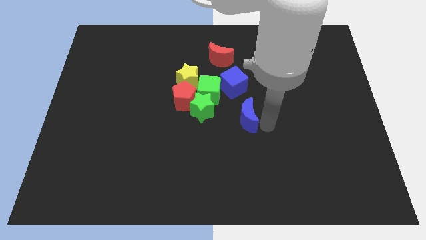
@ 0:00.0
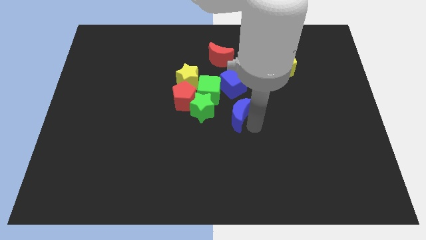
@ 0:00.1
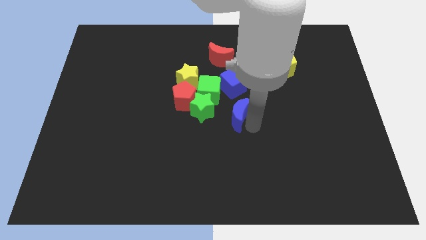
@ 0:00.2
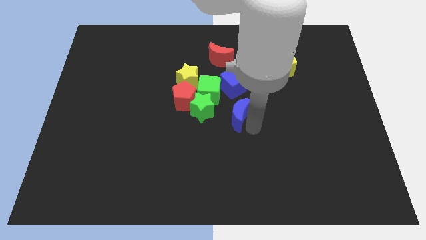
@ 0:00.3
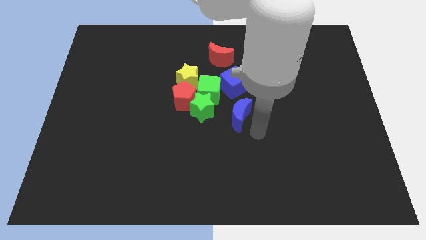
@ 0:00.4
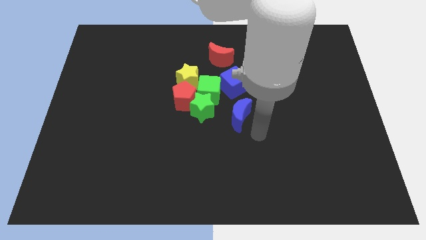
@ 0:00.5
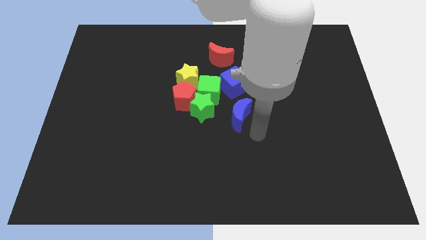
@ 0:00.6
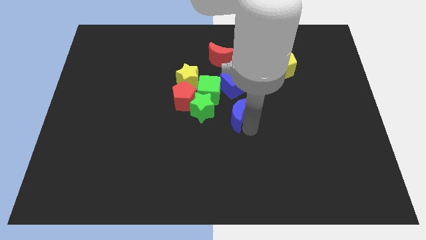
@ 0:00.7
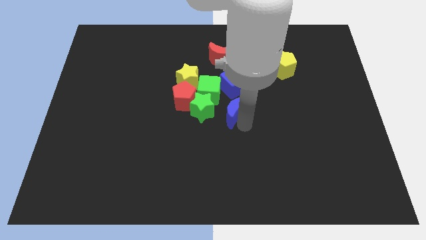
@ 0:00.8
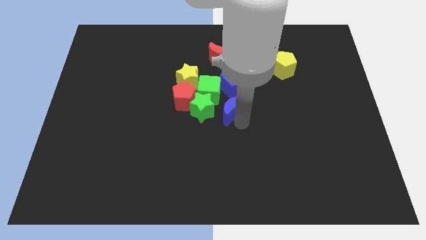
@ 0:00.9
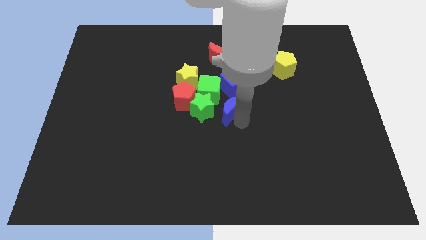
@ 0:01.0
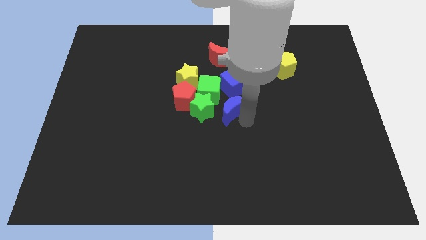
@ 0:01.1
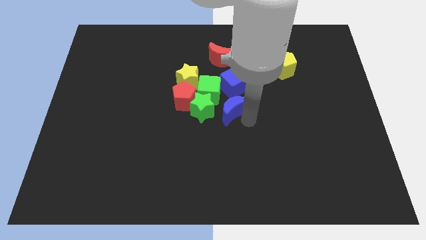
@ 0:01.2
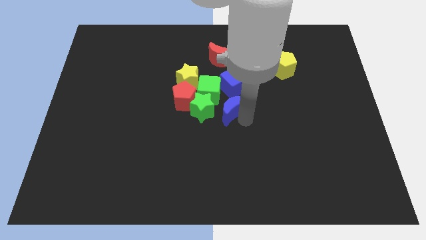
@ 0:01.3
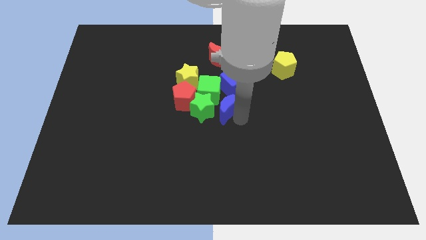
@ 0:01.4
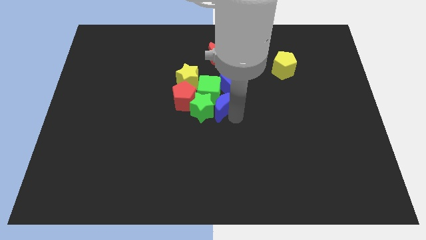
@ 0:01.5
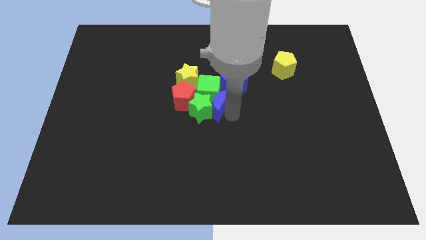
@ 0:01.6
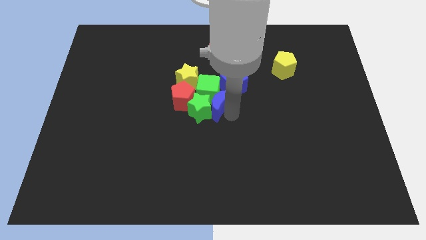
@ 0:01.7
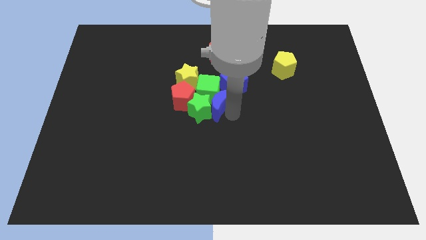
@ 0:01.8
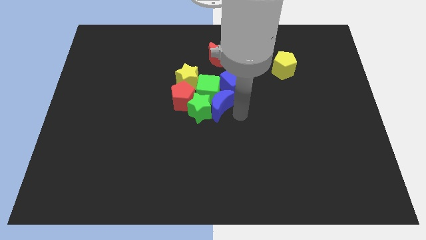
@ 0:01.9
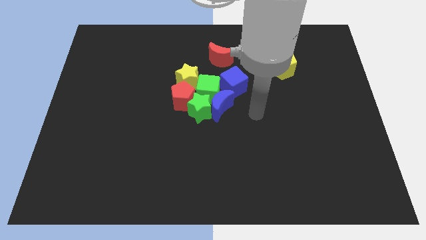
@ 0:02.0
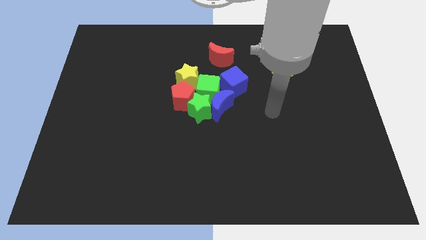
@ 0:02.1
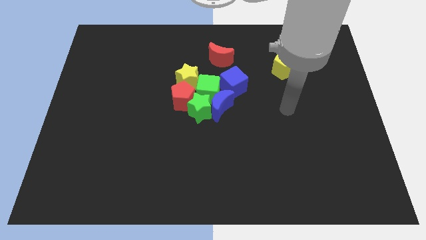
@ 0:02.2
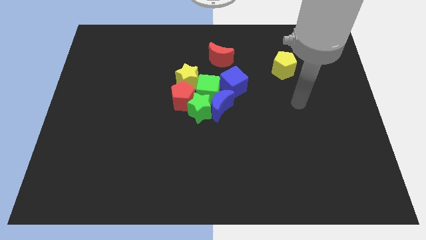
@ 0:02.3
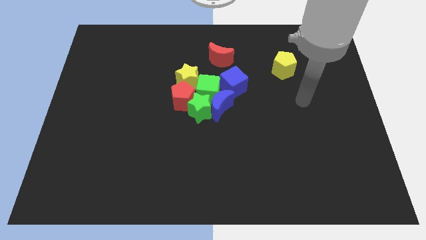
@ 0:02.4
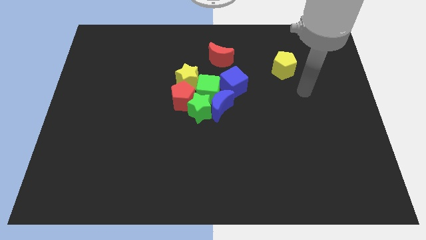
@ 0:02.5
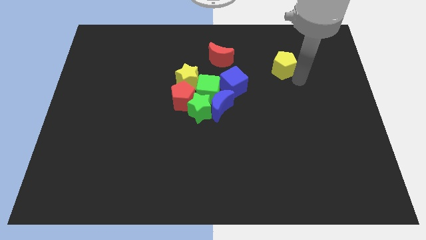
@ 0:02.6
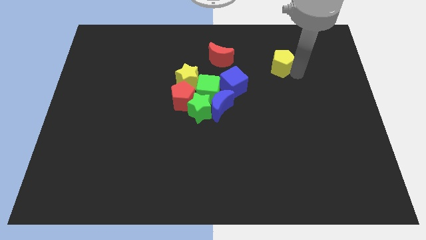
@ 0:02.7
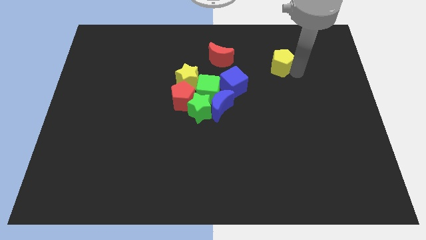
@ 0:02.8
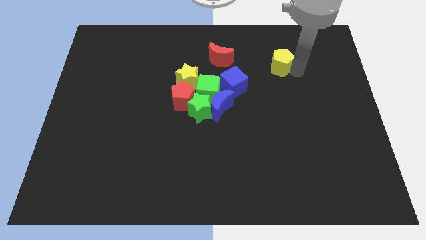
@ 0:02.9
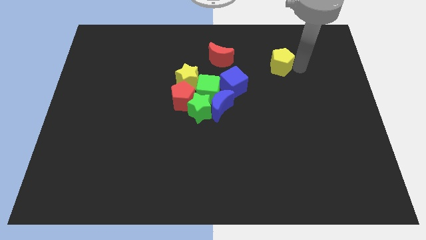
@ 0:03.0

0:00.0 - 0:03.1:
touch the bottom right of the yellow pentagon

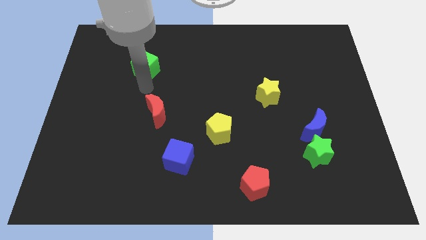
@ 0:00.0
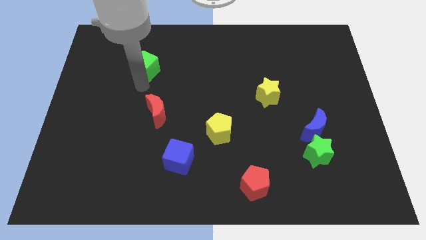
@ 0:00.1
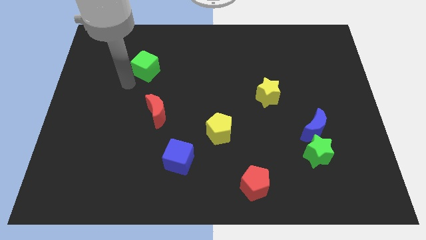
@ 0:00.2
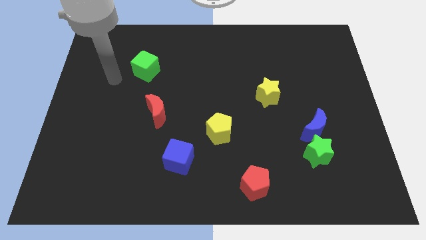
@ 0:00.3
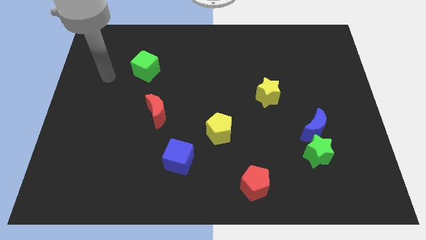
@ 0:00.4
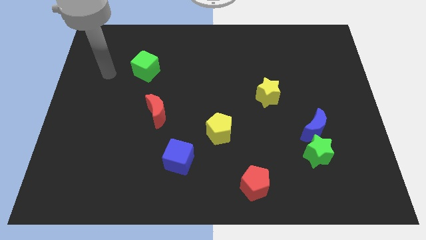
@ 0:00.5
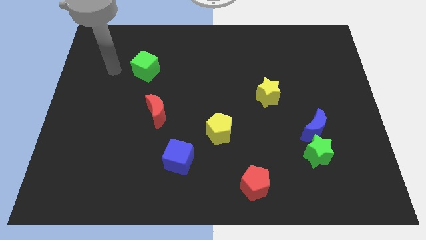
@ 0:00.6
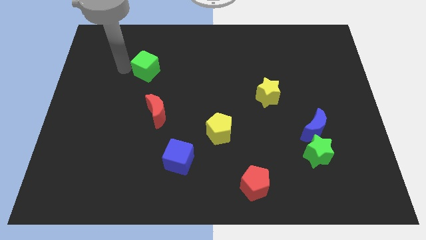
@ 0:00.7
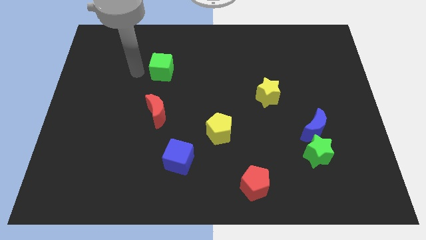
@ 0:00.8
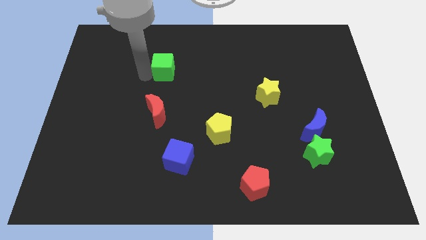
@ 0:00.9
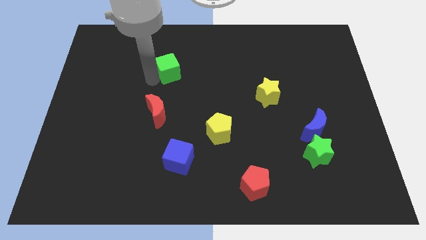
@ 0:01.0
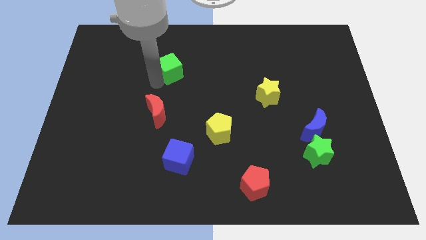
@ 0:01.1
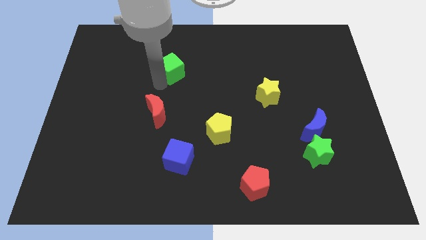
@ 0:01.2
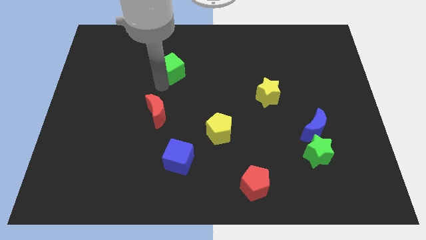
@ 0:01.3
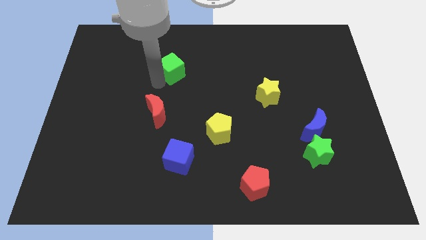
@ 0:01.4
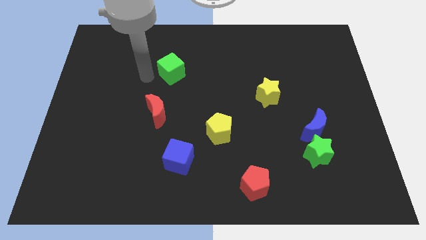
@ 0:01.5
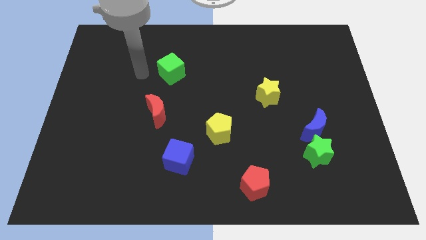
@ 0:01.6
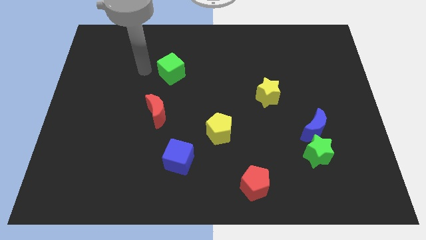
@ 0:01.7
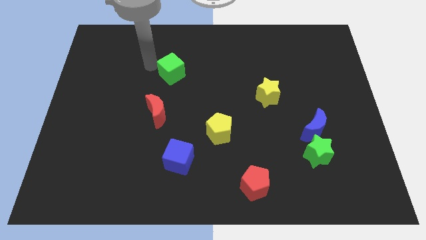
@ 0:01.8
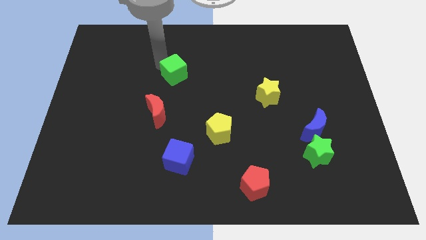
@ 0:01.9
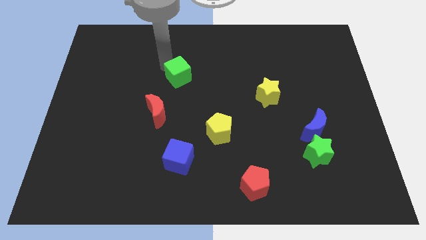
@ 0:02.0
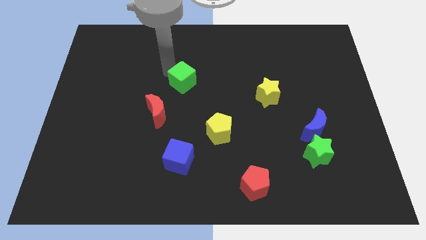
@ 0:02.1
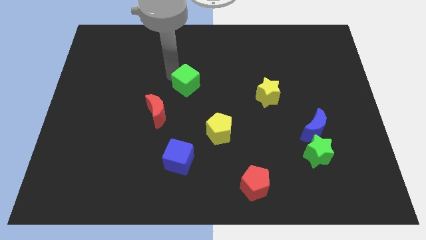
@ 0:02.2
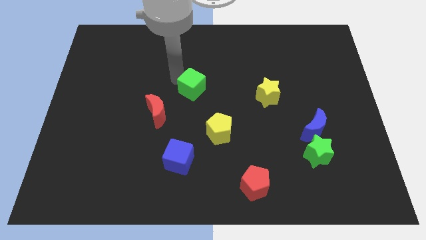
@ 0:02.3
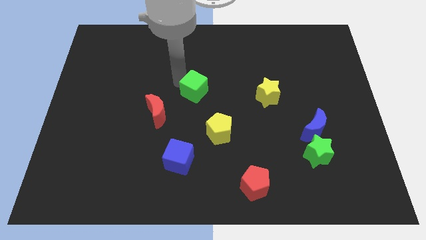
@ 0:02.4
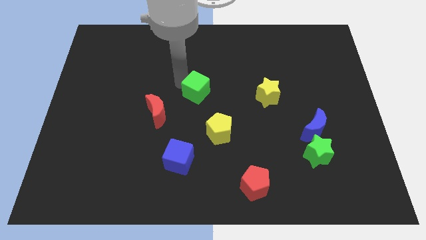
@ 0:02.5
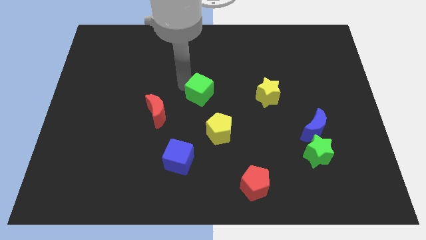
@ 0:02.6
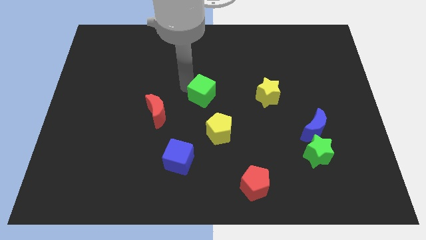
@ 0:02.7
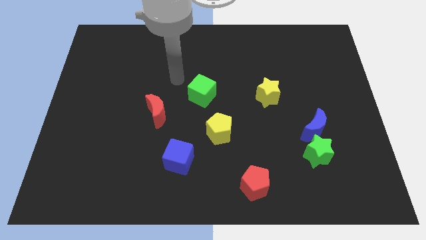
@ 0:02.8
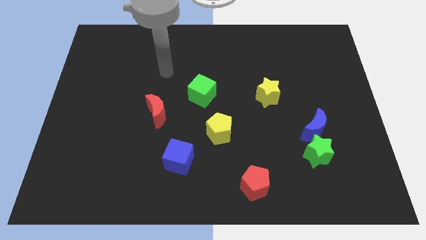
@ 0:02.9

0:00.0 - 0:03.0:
push green star towards yellow pentagon

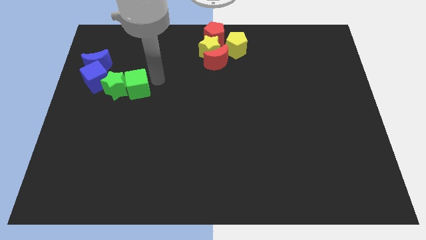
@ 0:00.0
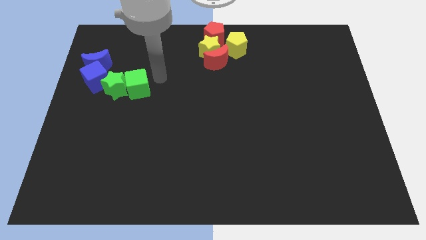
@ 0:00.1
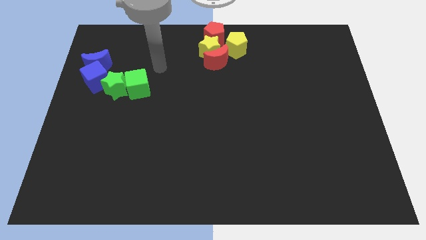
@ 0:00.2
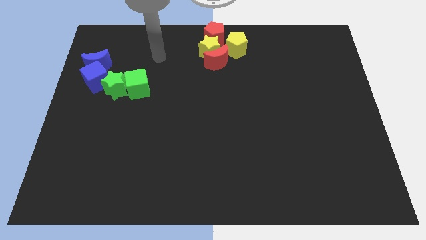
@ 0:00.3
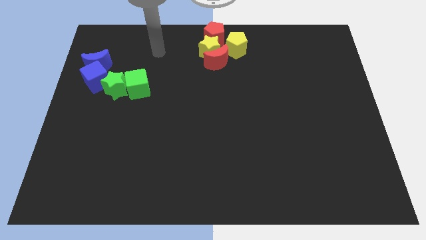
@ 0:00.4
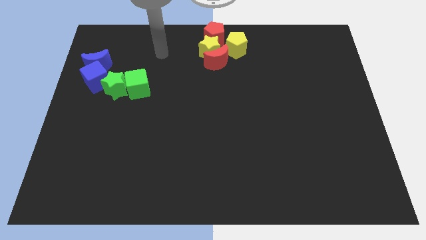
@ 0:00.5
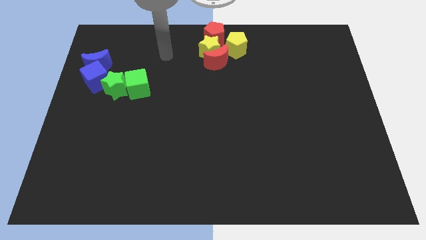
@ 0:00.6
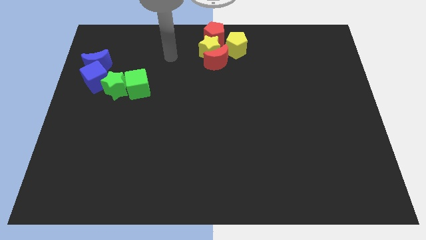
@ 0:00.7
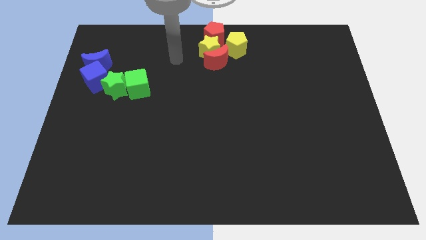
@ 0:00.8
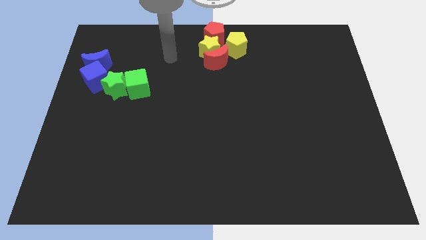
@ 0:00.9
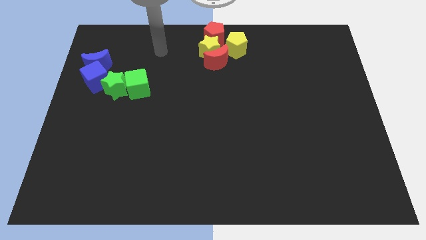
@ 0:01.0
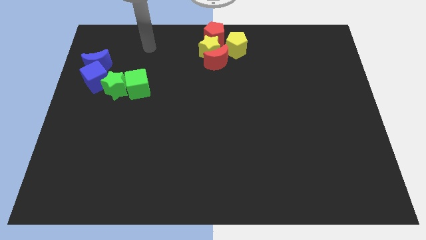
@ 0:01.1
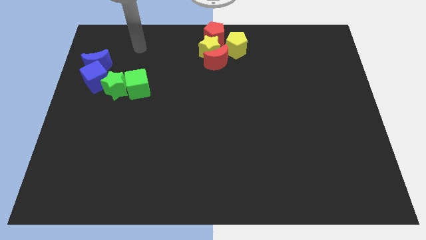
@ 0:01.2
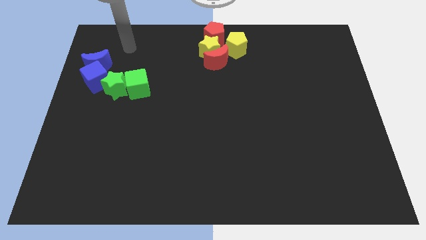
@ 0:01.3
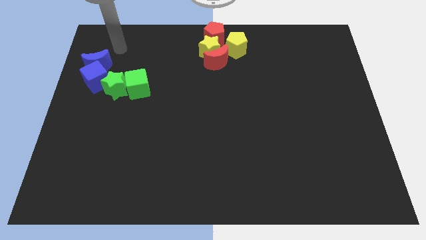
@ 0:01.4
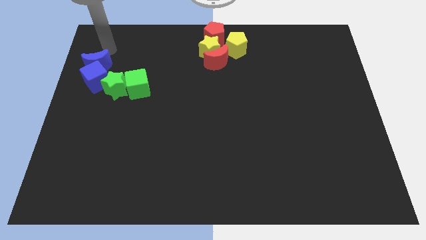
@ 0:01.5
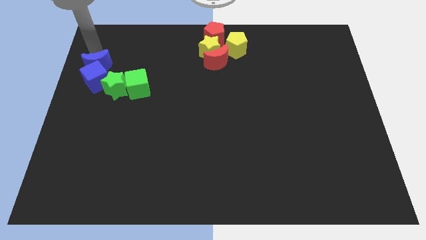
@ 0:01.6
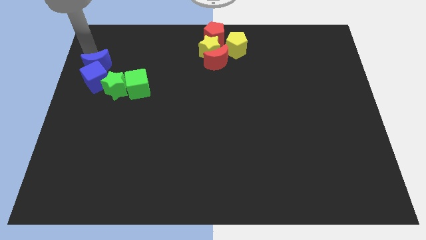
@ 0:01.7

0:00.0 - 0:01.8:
move your arm to the top side of the blue moon

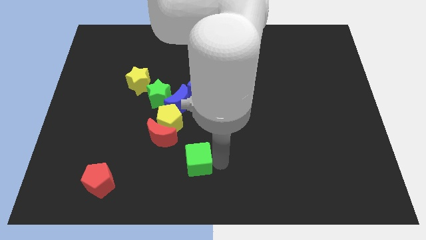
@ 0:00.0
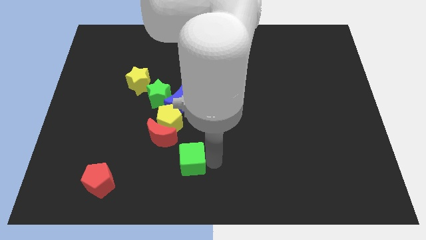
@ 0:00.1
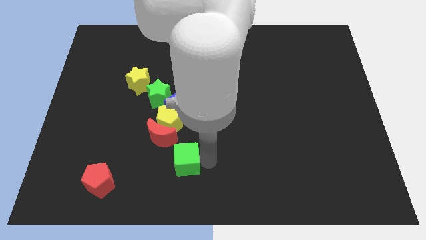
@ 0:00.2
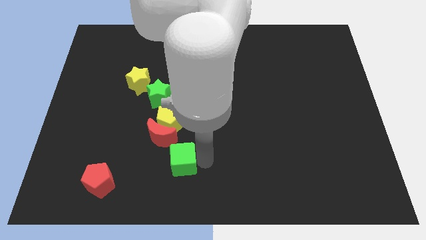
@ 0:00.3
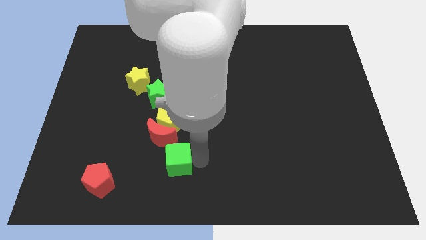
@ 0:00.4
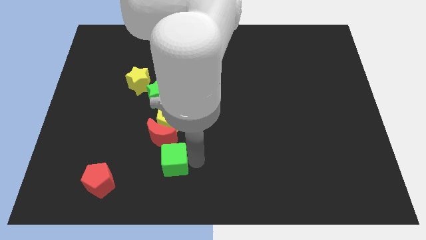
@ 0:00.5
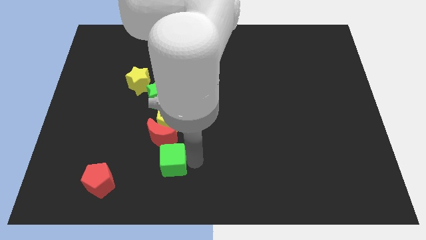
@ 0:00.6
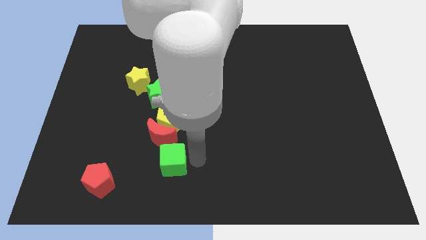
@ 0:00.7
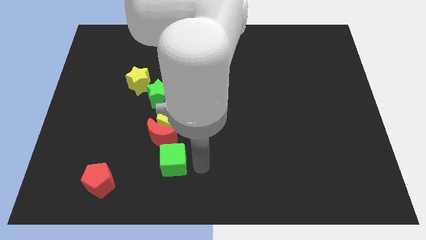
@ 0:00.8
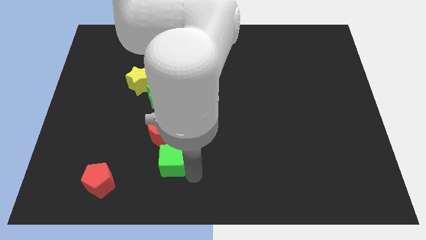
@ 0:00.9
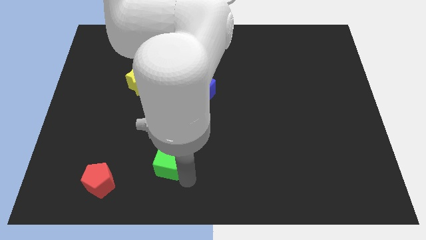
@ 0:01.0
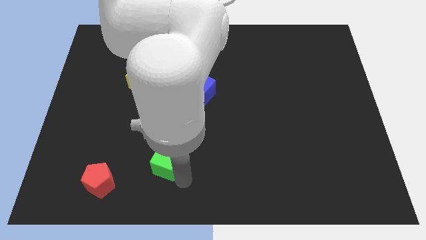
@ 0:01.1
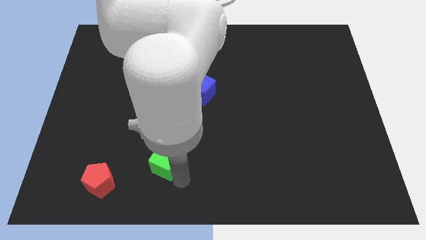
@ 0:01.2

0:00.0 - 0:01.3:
push green cube below red moon
